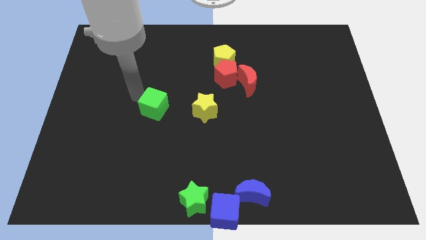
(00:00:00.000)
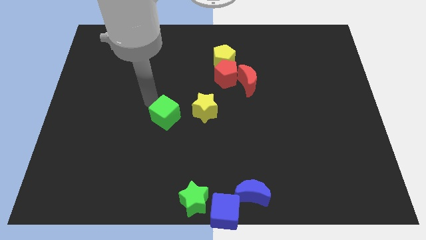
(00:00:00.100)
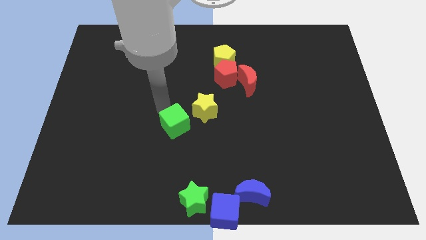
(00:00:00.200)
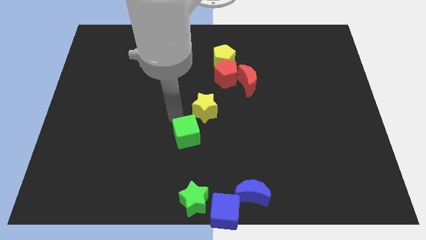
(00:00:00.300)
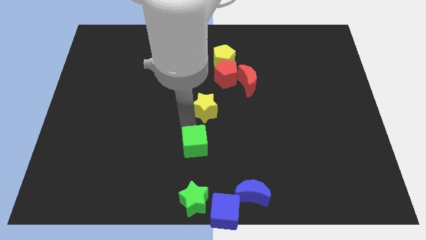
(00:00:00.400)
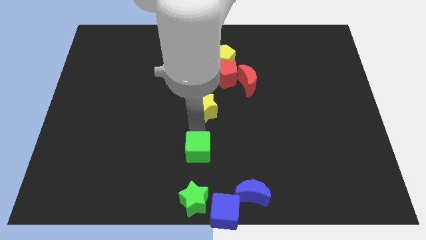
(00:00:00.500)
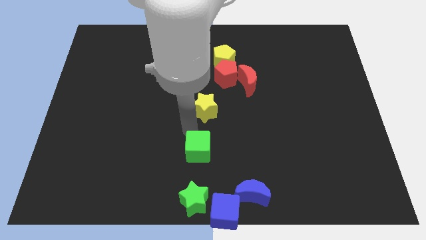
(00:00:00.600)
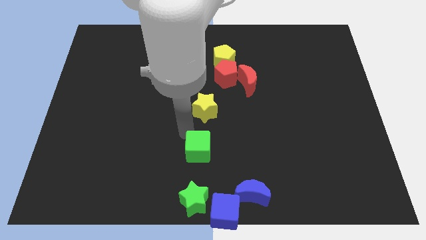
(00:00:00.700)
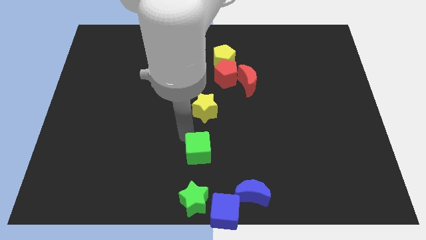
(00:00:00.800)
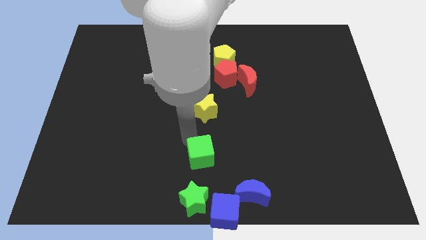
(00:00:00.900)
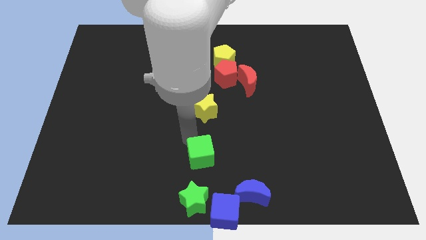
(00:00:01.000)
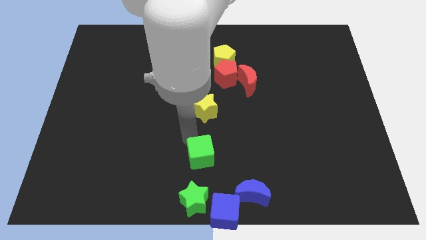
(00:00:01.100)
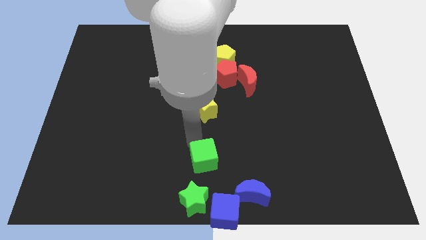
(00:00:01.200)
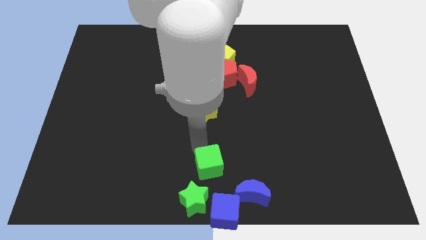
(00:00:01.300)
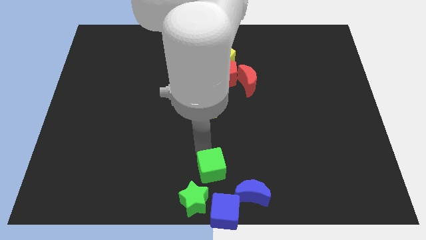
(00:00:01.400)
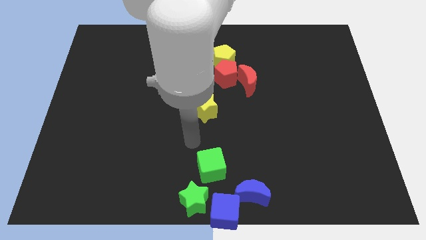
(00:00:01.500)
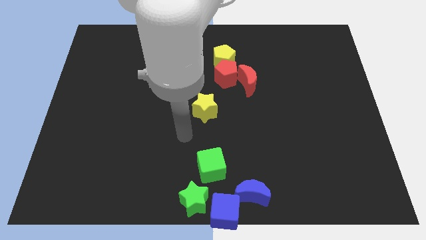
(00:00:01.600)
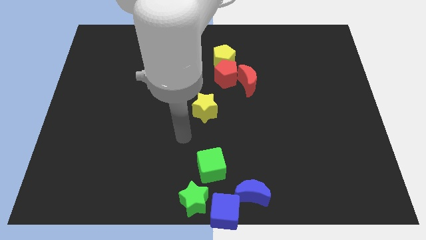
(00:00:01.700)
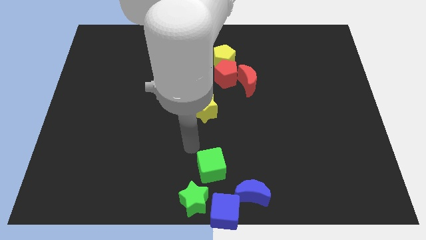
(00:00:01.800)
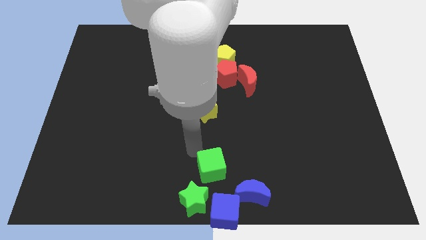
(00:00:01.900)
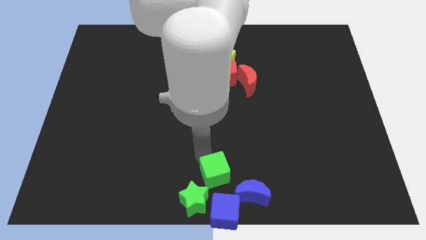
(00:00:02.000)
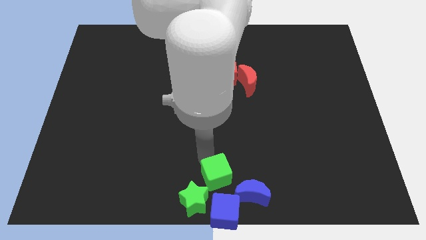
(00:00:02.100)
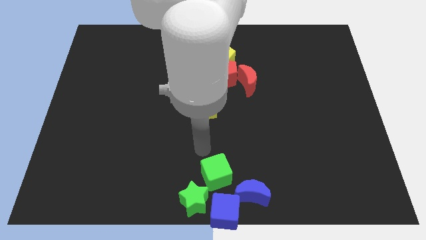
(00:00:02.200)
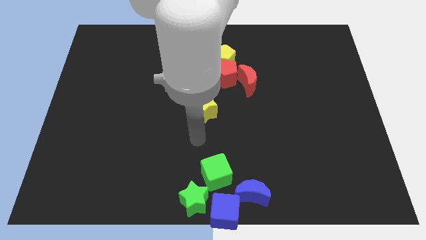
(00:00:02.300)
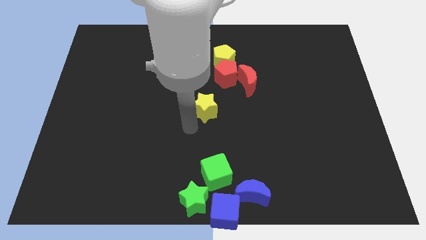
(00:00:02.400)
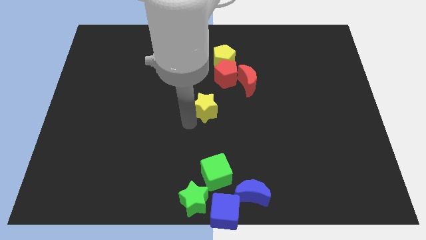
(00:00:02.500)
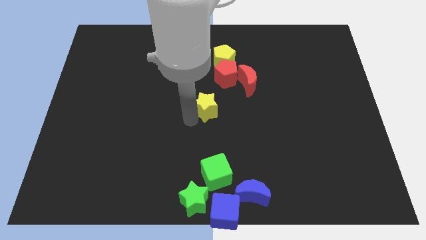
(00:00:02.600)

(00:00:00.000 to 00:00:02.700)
place green cube into the group of blocks

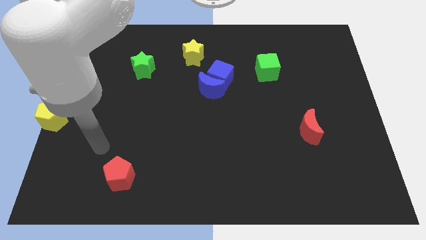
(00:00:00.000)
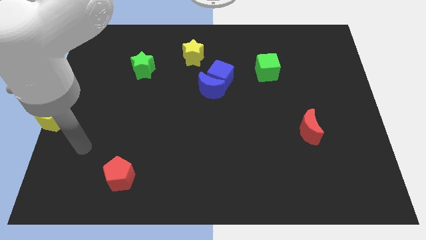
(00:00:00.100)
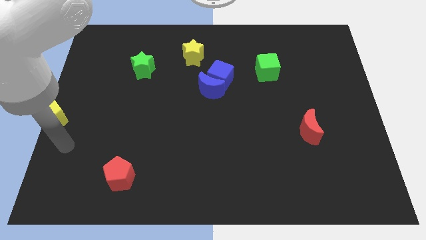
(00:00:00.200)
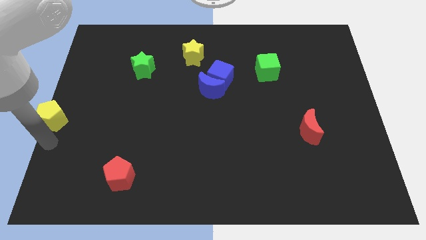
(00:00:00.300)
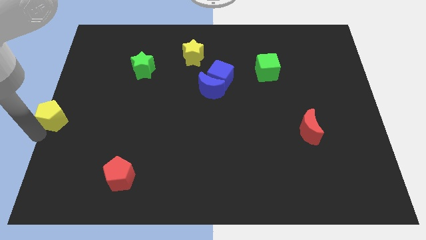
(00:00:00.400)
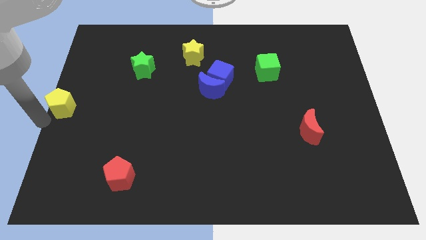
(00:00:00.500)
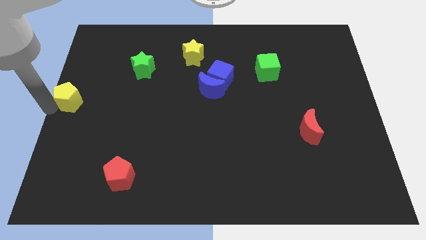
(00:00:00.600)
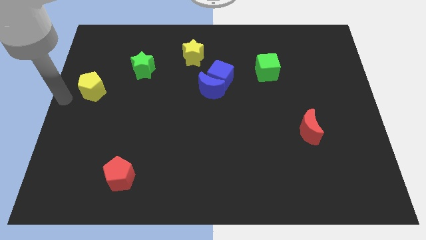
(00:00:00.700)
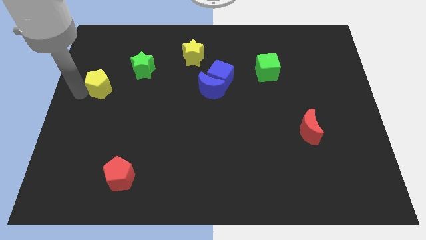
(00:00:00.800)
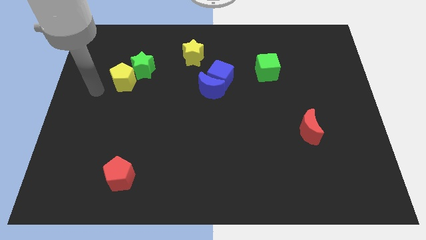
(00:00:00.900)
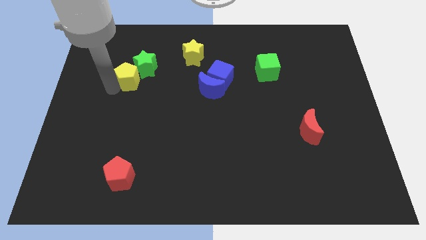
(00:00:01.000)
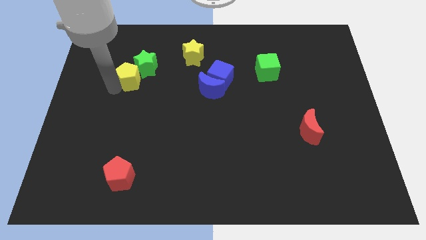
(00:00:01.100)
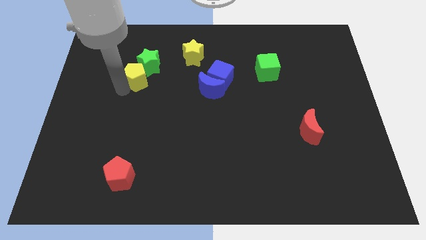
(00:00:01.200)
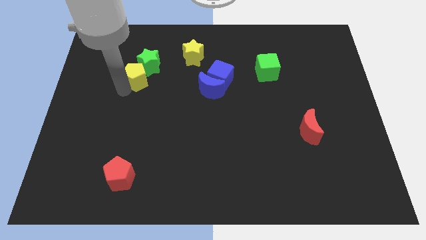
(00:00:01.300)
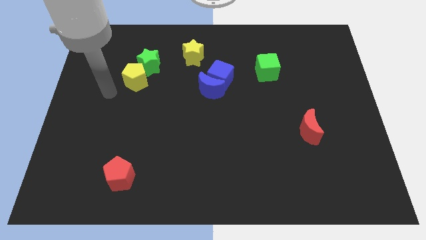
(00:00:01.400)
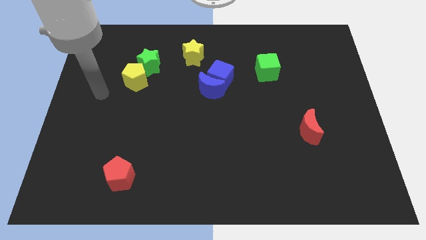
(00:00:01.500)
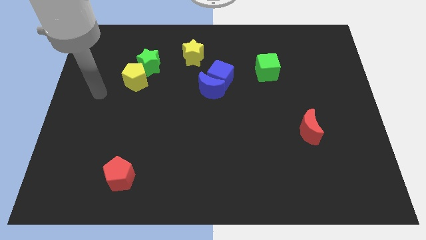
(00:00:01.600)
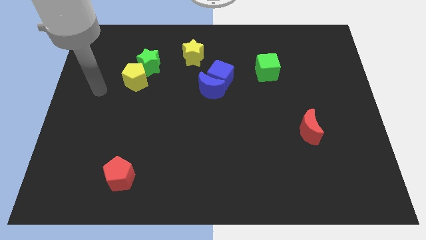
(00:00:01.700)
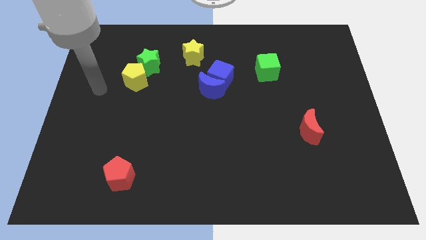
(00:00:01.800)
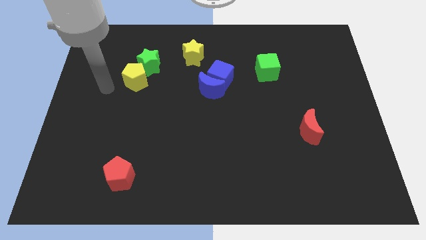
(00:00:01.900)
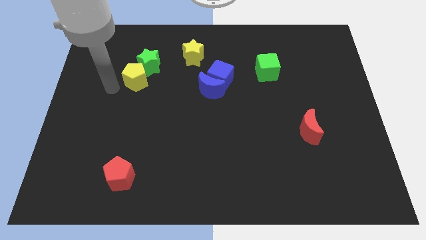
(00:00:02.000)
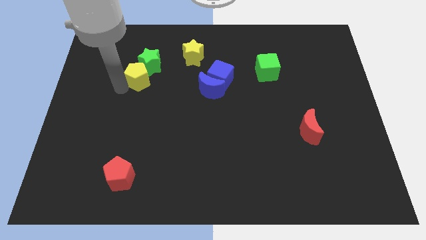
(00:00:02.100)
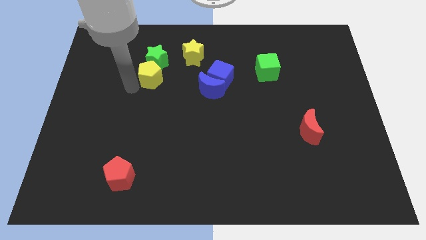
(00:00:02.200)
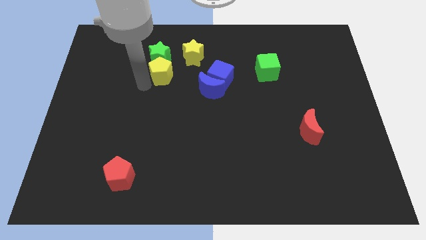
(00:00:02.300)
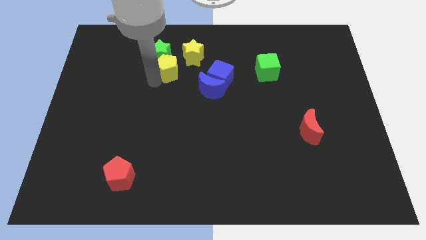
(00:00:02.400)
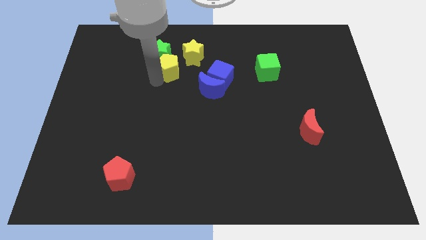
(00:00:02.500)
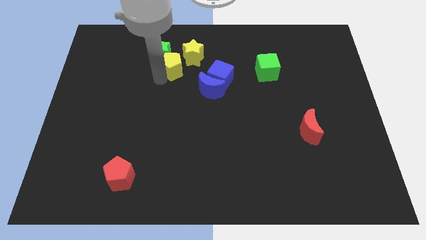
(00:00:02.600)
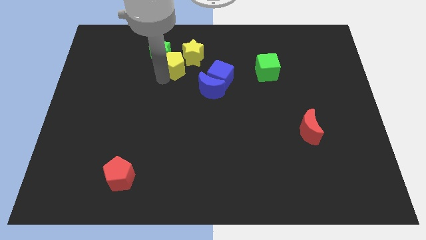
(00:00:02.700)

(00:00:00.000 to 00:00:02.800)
push yellow pentagon towards yellow star

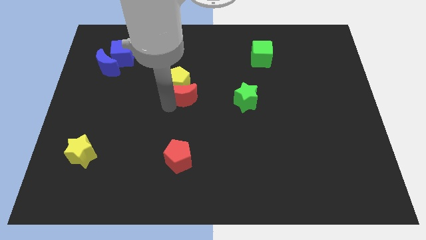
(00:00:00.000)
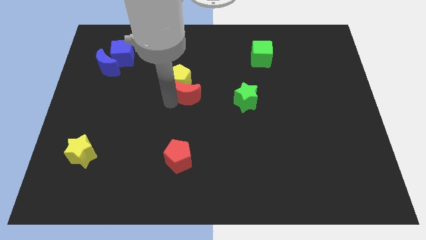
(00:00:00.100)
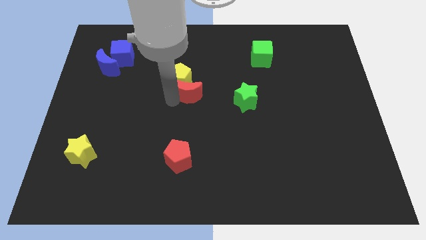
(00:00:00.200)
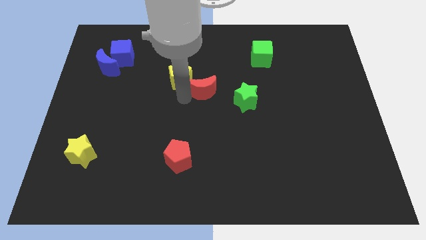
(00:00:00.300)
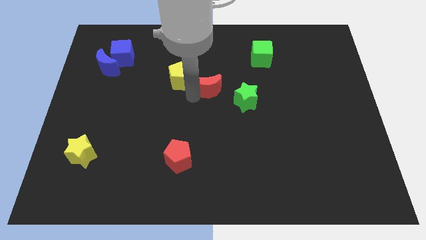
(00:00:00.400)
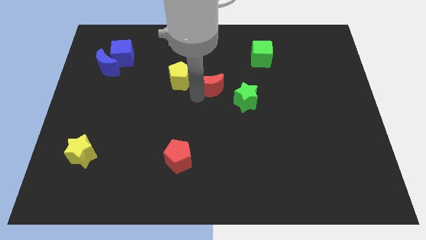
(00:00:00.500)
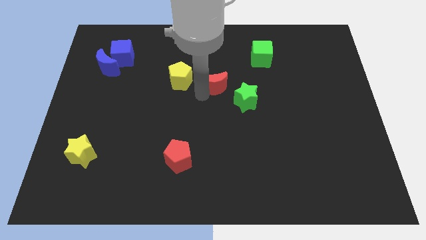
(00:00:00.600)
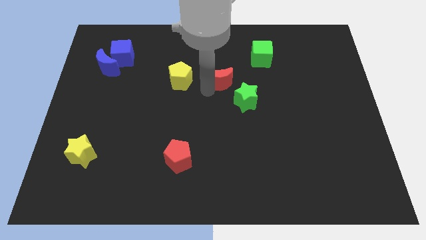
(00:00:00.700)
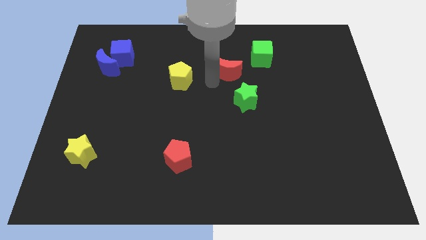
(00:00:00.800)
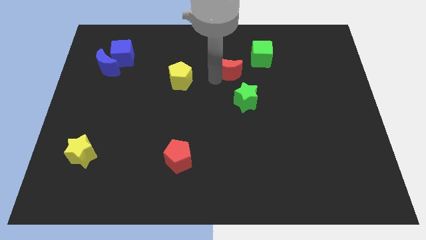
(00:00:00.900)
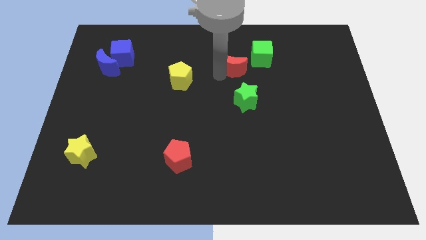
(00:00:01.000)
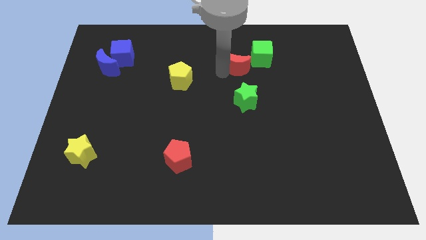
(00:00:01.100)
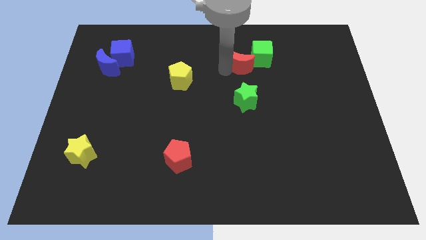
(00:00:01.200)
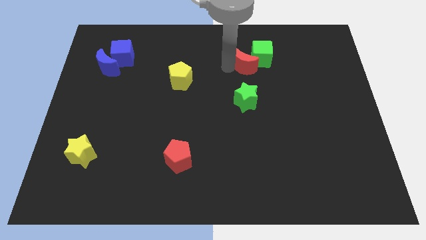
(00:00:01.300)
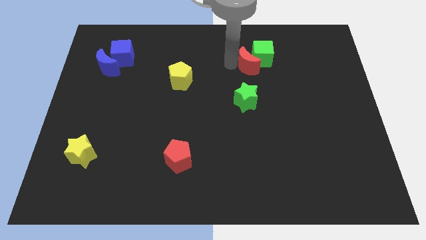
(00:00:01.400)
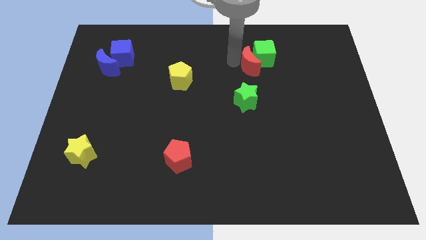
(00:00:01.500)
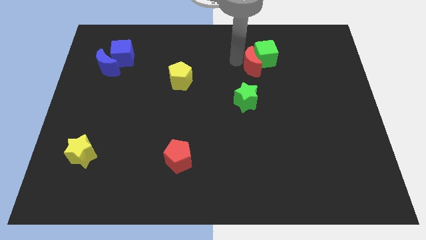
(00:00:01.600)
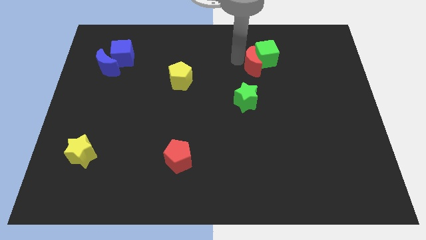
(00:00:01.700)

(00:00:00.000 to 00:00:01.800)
push the red crescent towards the green cube

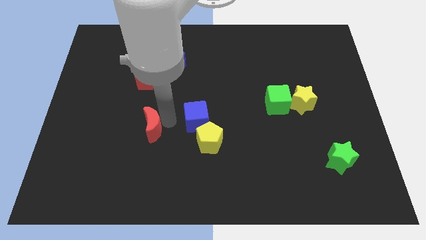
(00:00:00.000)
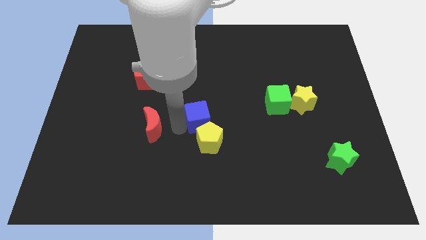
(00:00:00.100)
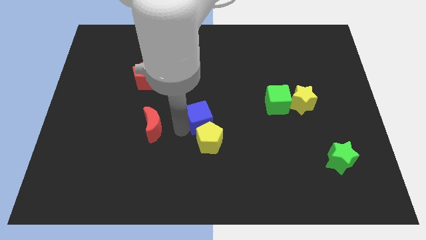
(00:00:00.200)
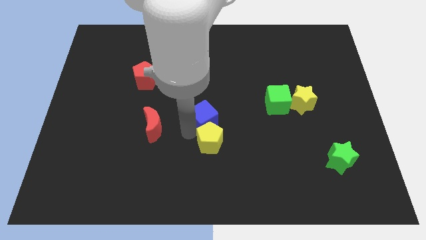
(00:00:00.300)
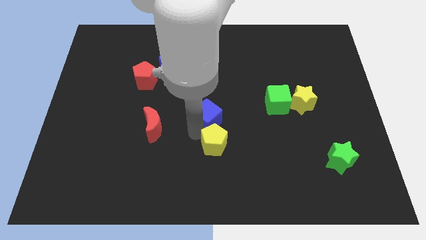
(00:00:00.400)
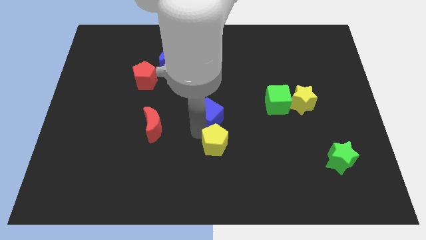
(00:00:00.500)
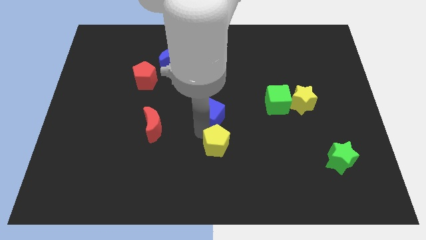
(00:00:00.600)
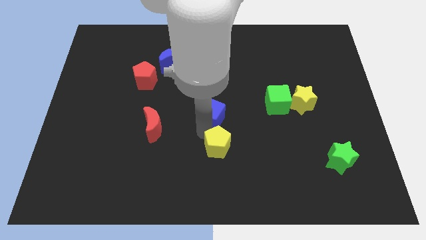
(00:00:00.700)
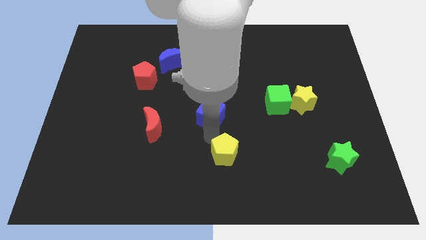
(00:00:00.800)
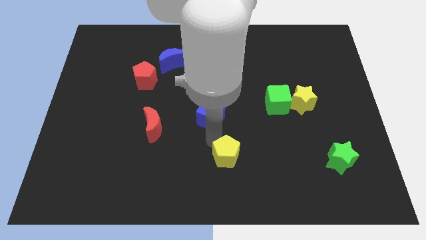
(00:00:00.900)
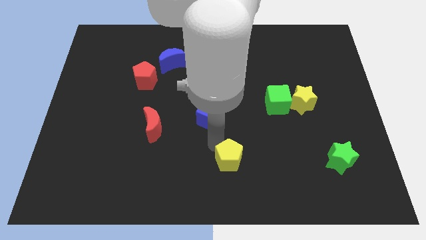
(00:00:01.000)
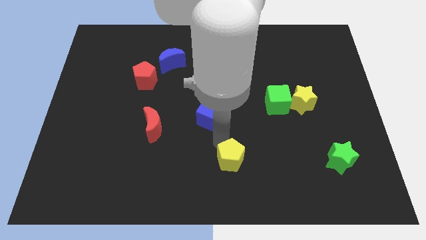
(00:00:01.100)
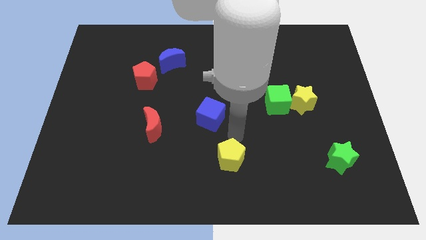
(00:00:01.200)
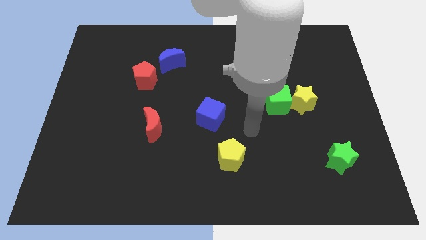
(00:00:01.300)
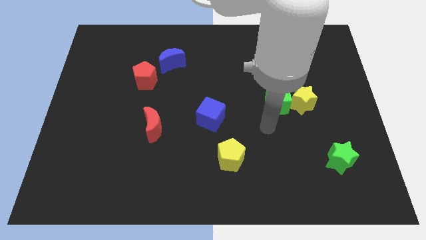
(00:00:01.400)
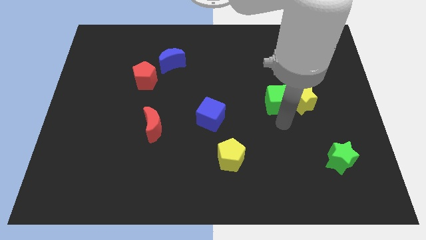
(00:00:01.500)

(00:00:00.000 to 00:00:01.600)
move the yellow pentagon horizontally to the left side of the green star
